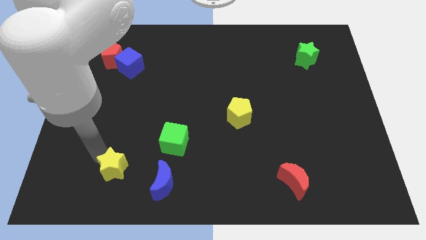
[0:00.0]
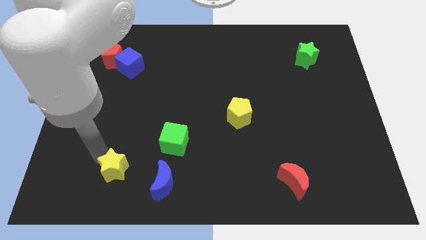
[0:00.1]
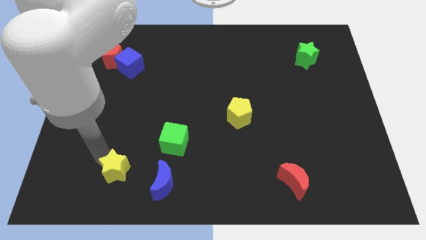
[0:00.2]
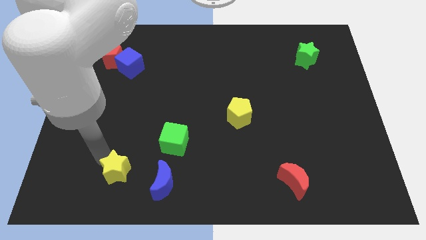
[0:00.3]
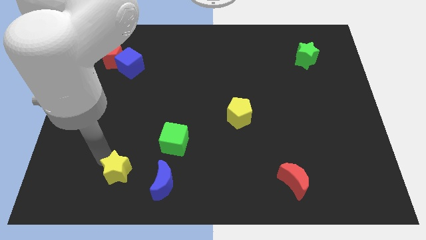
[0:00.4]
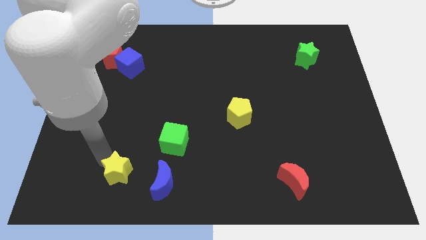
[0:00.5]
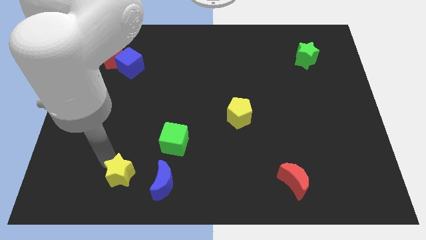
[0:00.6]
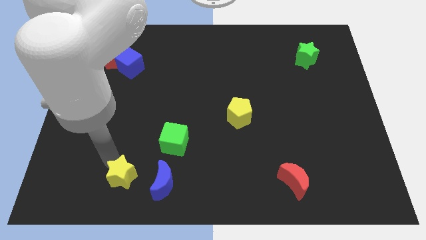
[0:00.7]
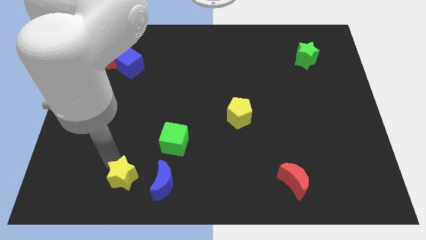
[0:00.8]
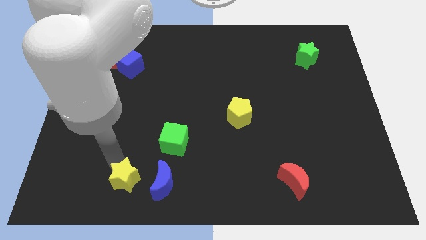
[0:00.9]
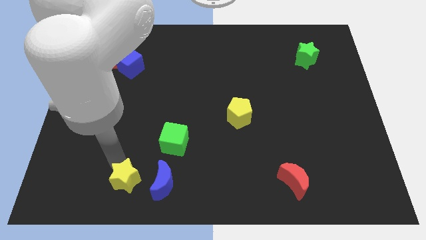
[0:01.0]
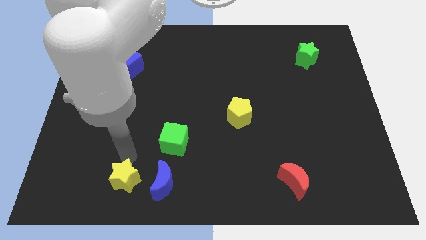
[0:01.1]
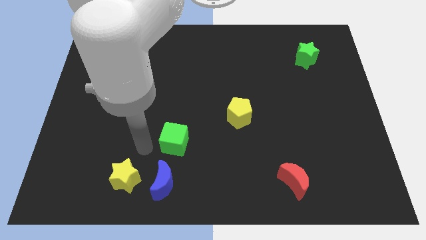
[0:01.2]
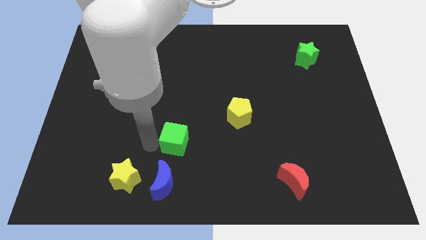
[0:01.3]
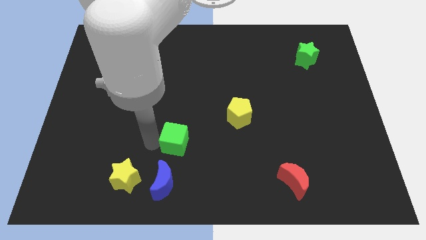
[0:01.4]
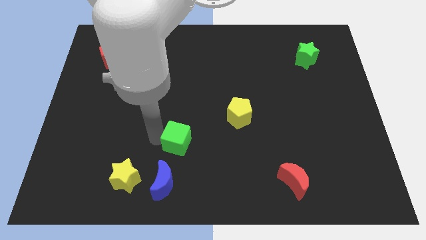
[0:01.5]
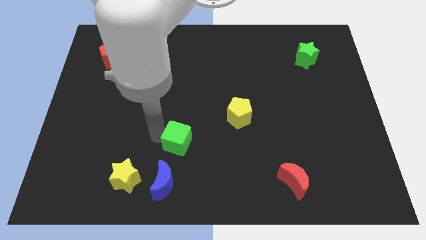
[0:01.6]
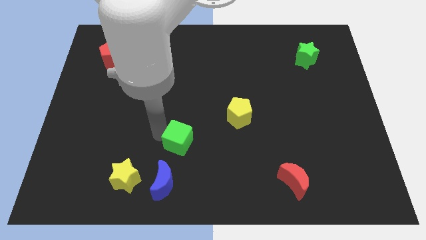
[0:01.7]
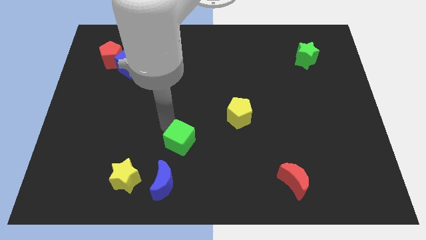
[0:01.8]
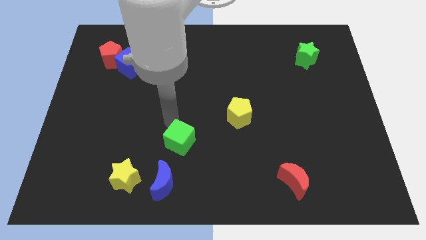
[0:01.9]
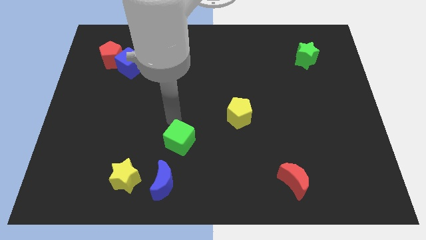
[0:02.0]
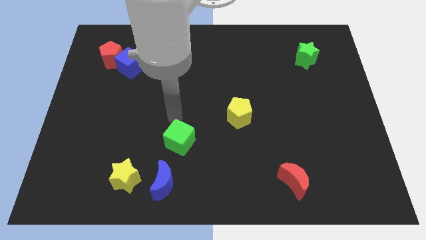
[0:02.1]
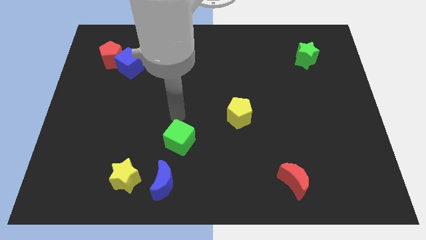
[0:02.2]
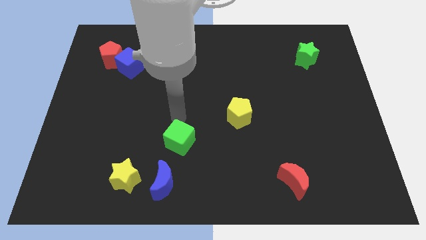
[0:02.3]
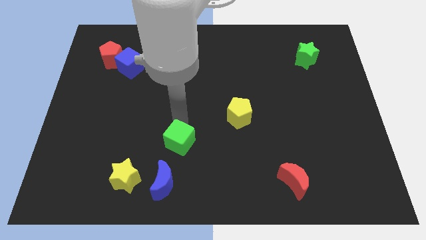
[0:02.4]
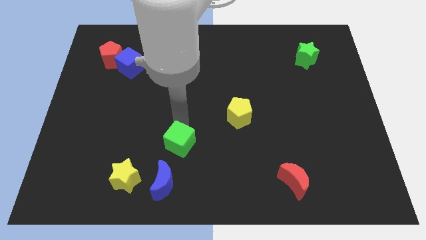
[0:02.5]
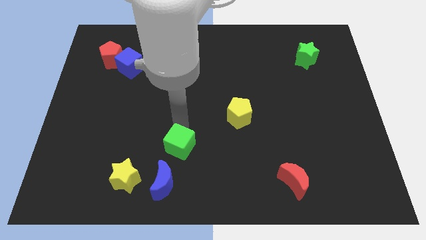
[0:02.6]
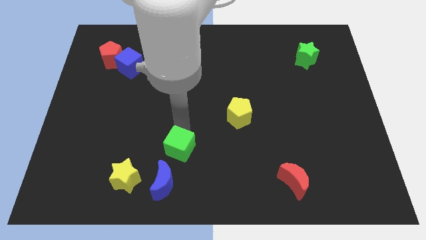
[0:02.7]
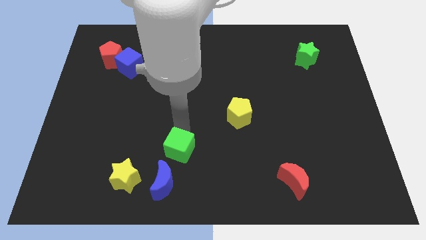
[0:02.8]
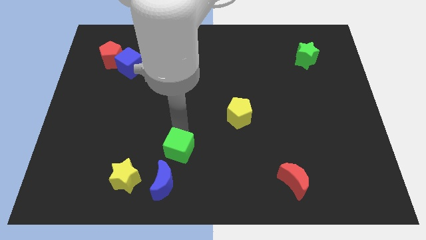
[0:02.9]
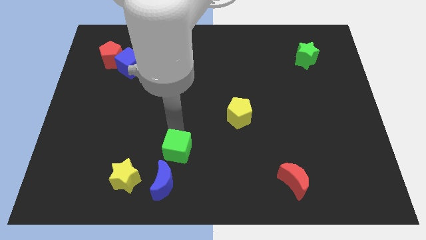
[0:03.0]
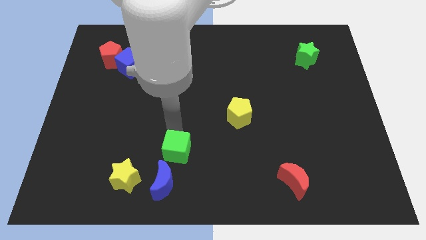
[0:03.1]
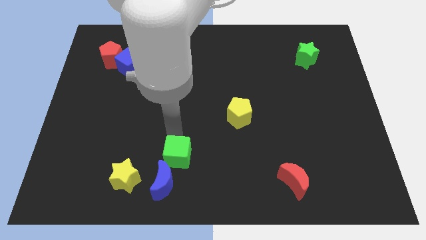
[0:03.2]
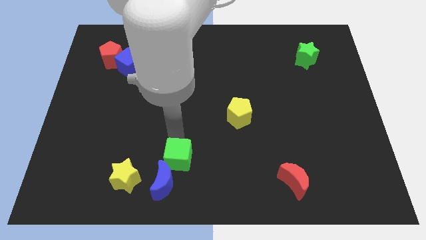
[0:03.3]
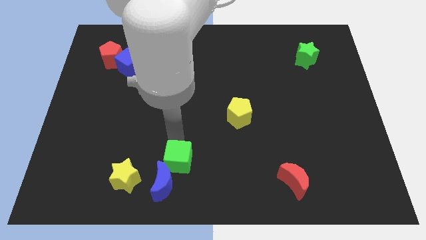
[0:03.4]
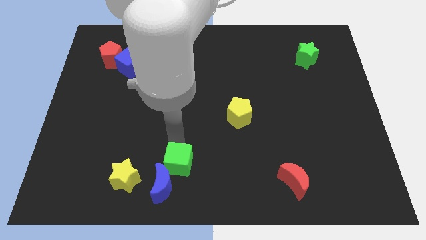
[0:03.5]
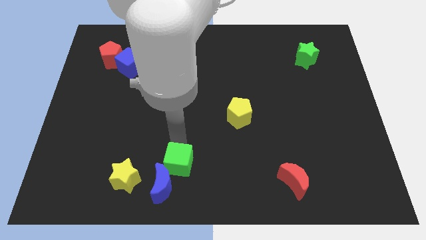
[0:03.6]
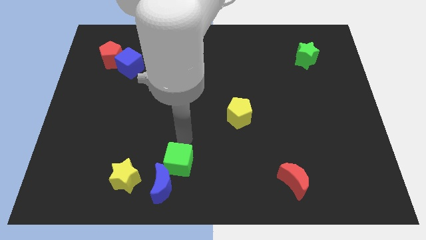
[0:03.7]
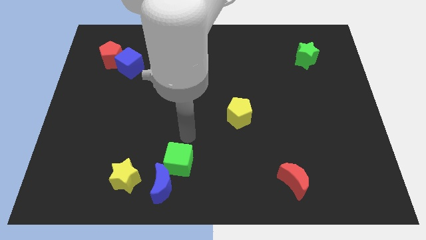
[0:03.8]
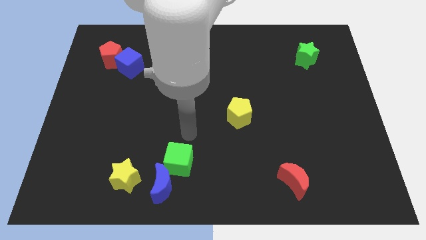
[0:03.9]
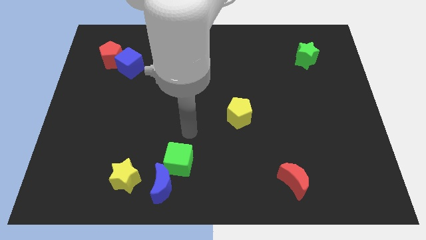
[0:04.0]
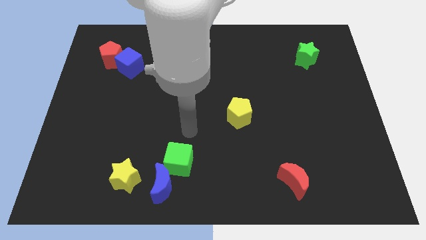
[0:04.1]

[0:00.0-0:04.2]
push the green cube into the blue crescent

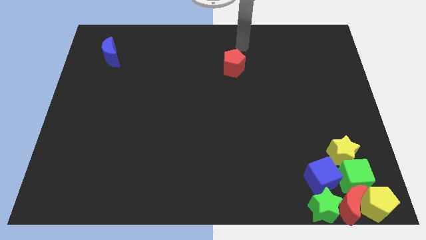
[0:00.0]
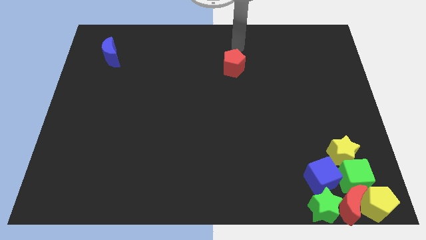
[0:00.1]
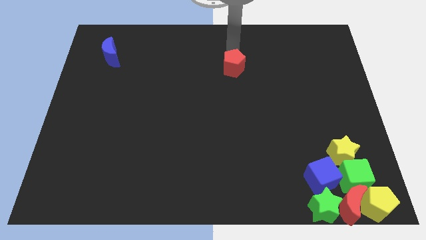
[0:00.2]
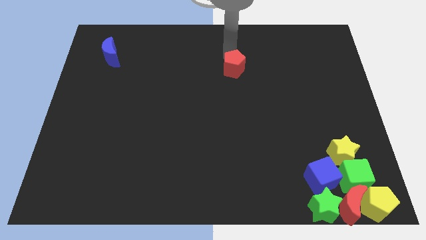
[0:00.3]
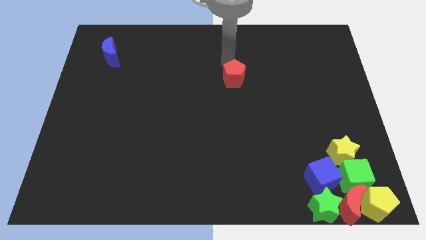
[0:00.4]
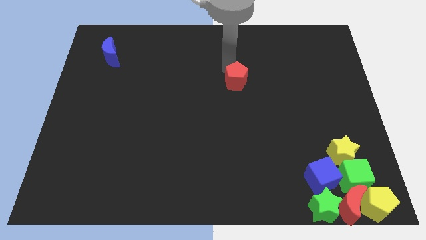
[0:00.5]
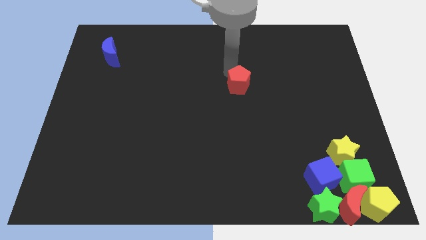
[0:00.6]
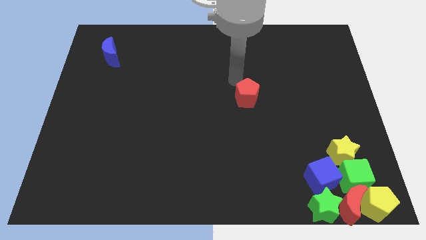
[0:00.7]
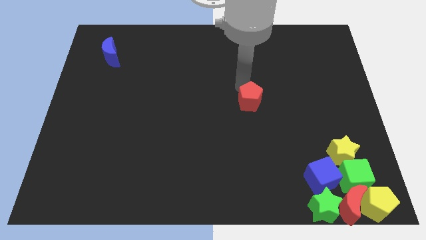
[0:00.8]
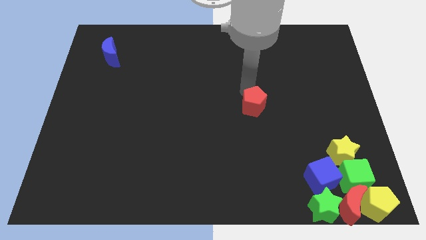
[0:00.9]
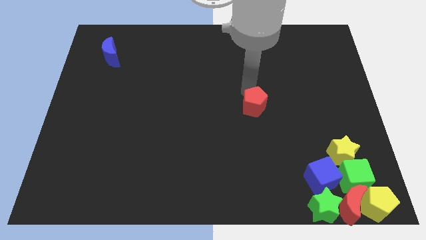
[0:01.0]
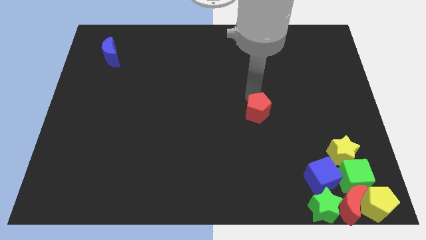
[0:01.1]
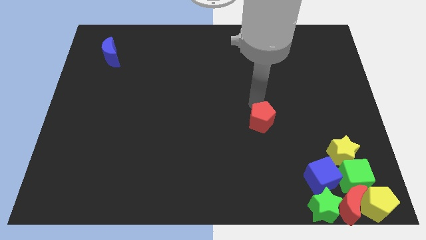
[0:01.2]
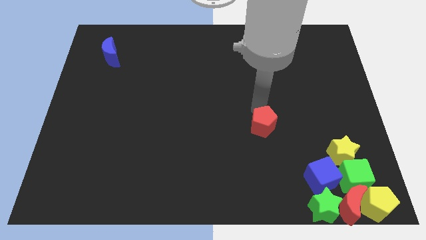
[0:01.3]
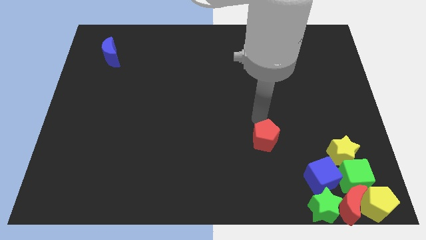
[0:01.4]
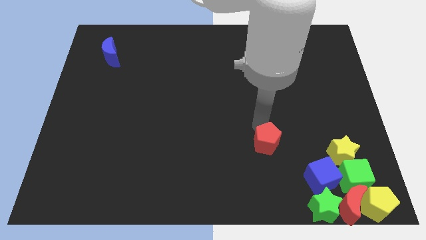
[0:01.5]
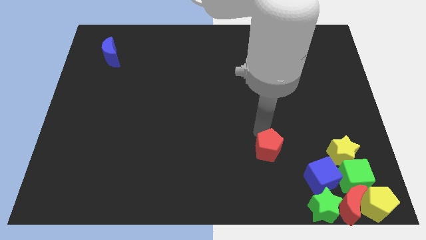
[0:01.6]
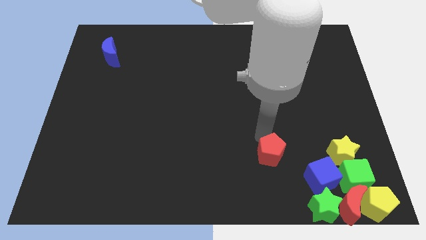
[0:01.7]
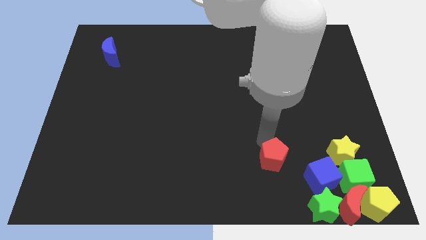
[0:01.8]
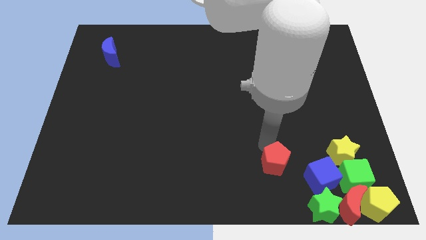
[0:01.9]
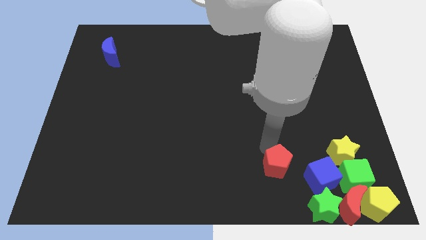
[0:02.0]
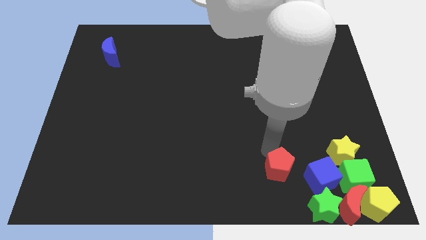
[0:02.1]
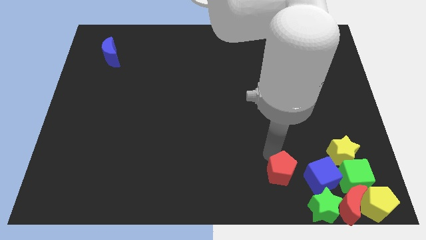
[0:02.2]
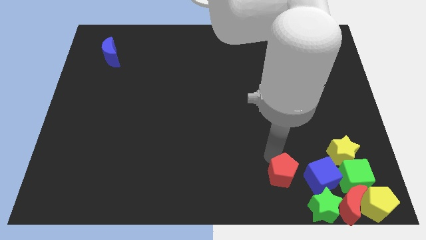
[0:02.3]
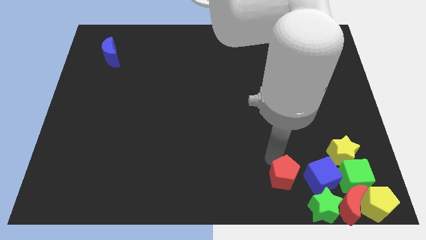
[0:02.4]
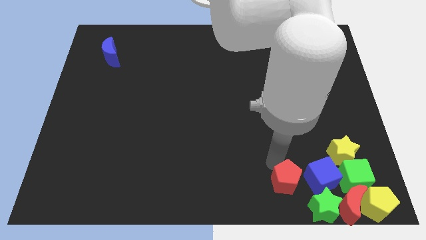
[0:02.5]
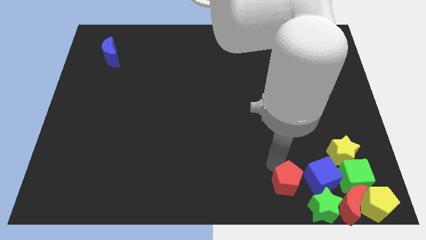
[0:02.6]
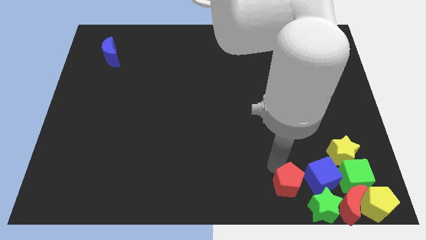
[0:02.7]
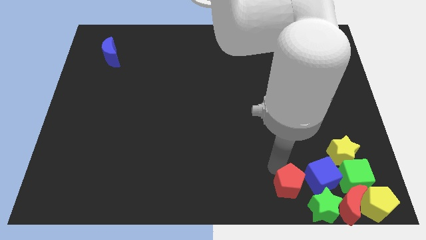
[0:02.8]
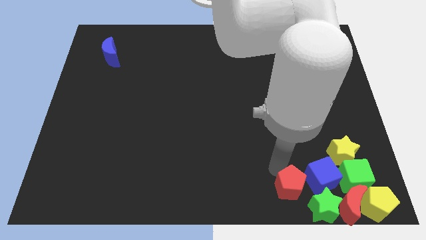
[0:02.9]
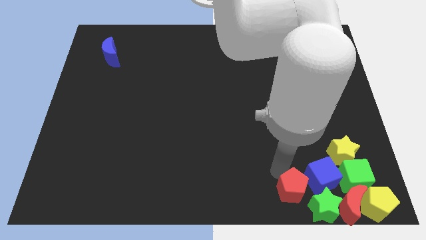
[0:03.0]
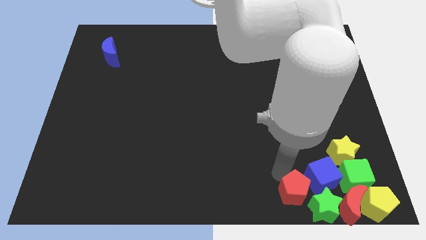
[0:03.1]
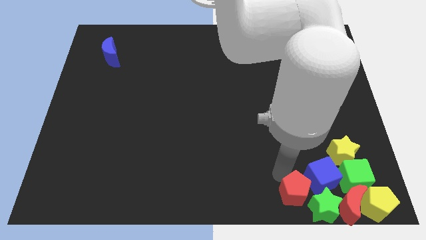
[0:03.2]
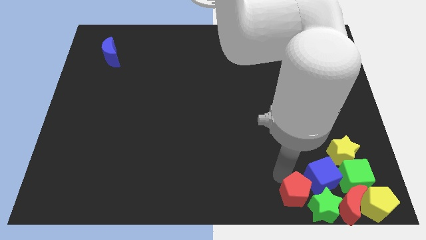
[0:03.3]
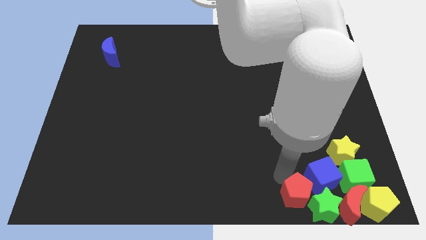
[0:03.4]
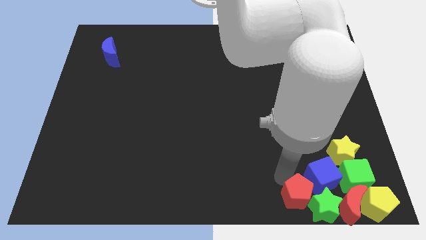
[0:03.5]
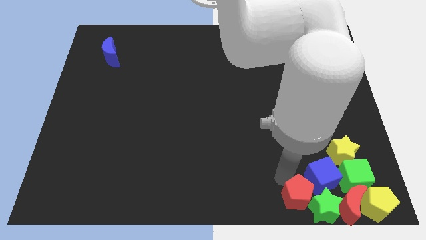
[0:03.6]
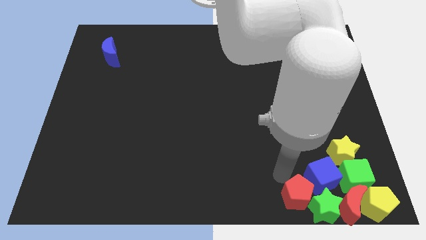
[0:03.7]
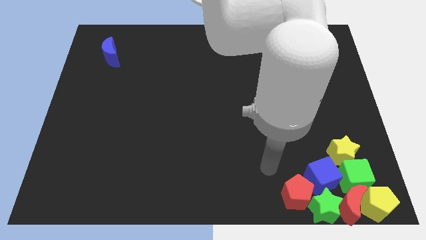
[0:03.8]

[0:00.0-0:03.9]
make the red pentagon to touch the green star

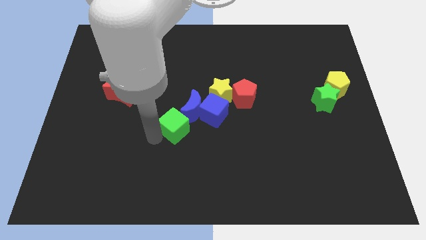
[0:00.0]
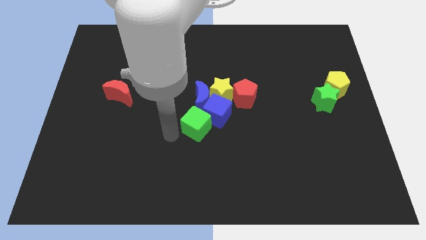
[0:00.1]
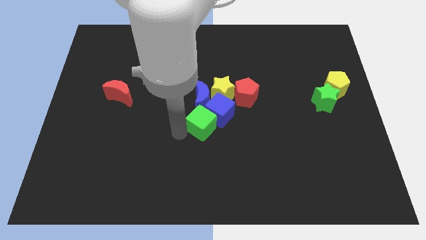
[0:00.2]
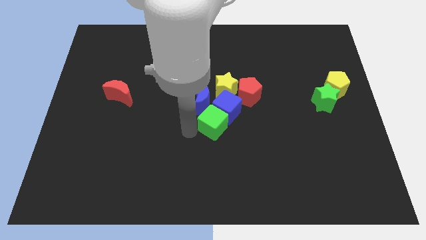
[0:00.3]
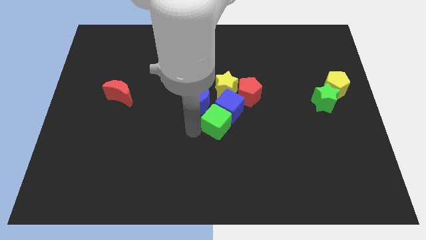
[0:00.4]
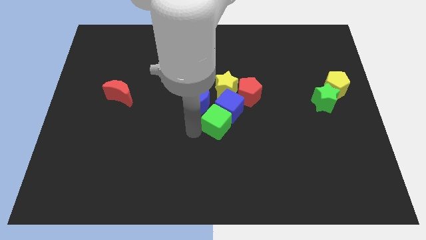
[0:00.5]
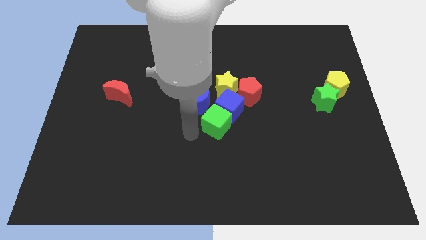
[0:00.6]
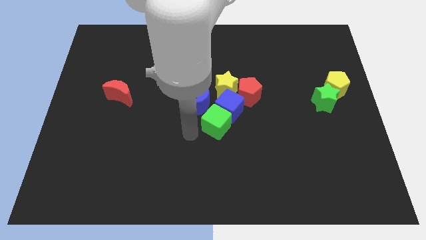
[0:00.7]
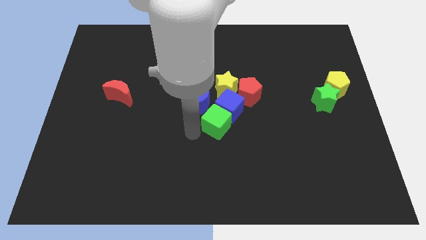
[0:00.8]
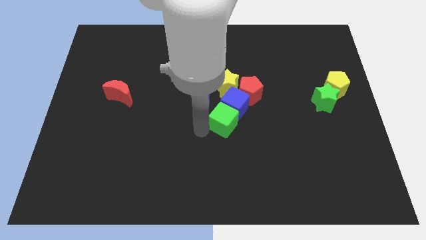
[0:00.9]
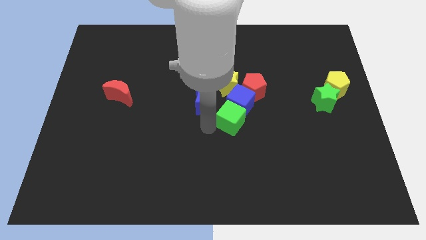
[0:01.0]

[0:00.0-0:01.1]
push the green cube into the blue cube
